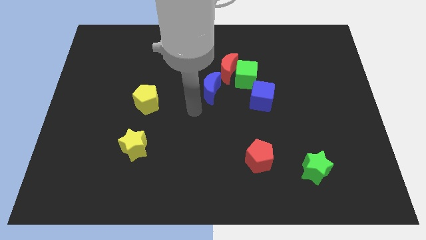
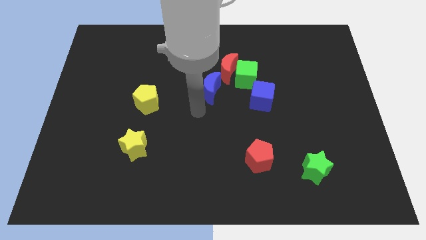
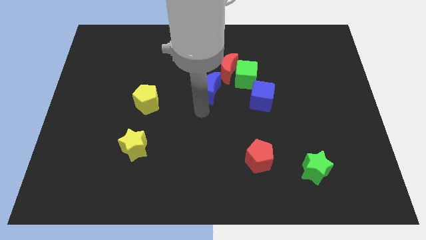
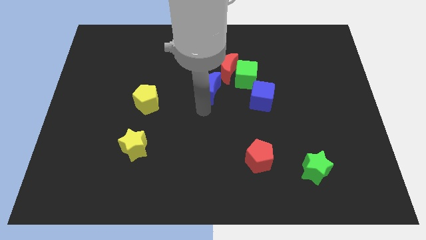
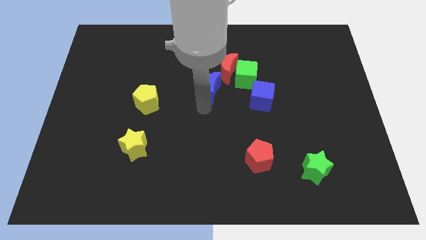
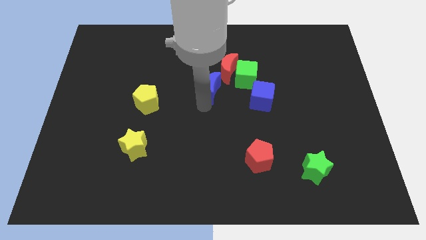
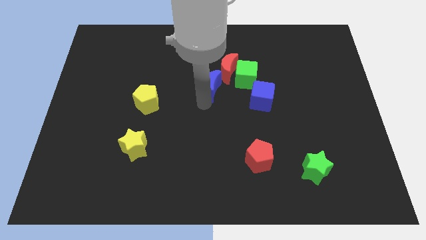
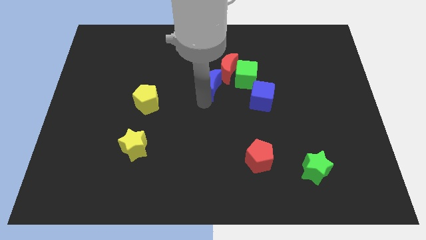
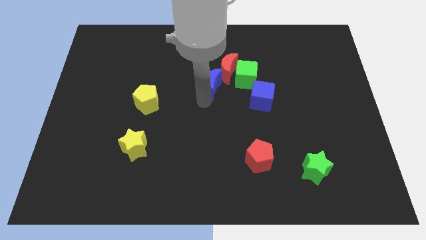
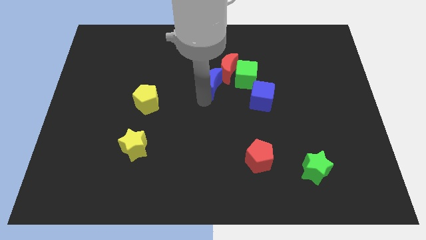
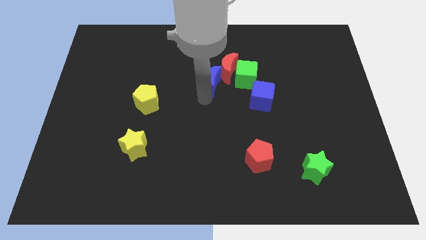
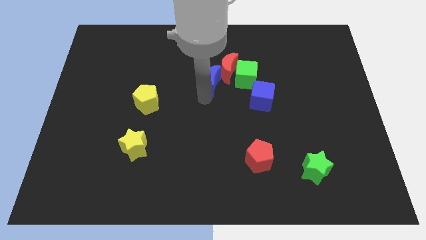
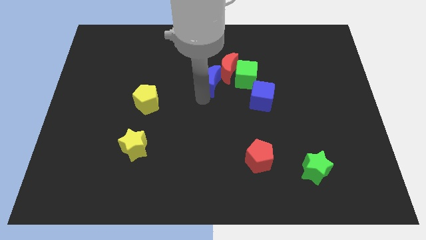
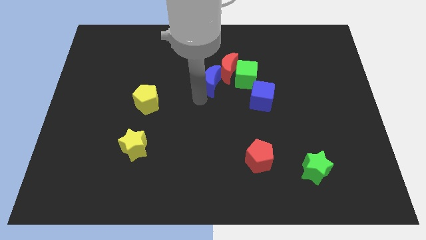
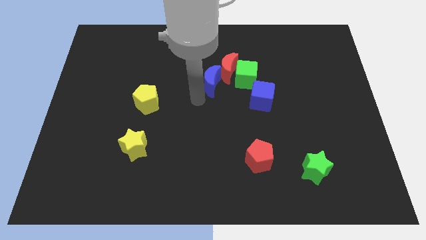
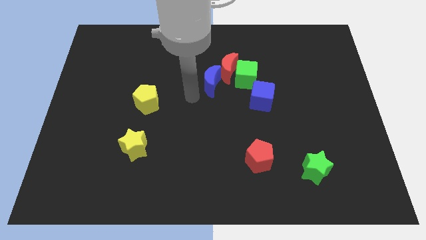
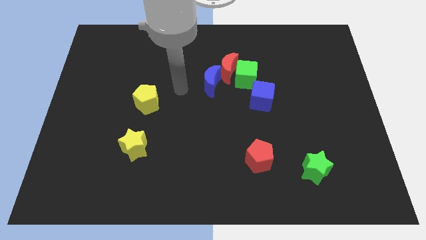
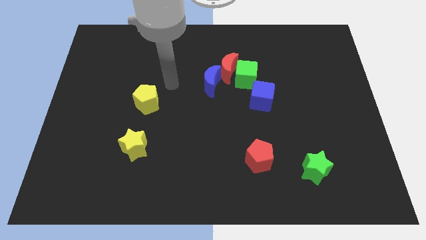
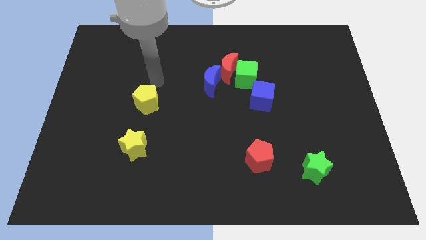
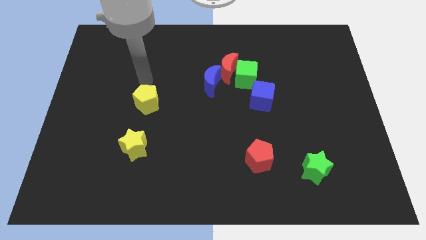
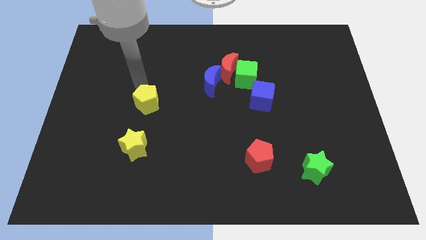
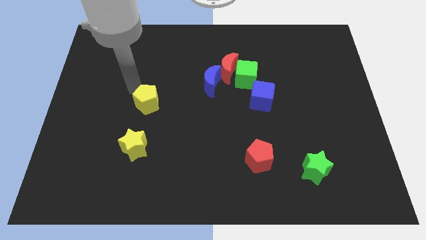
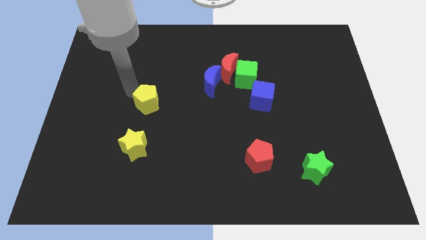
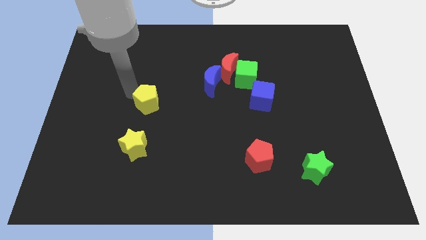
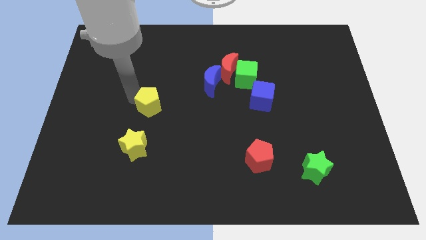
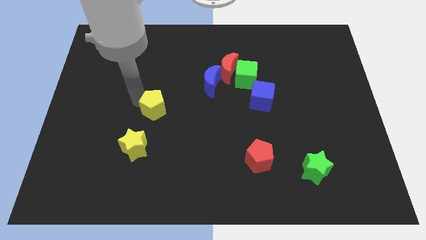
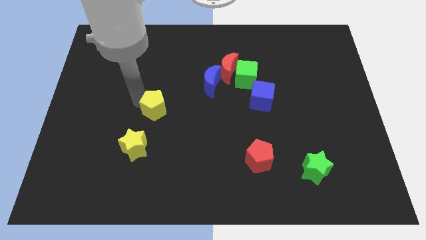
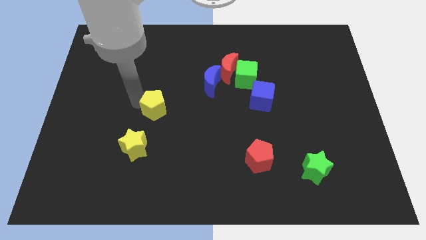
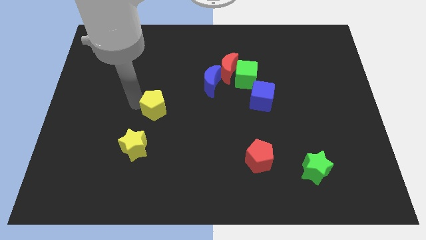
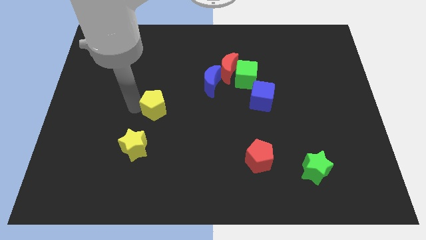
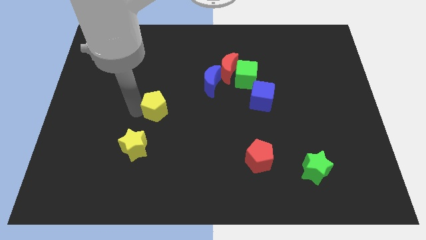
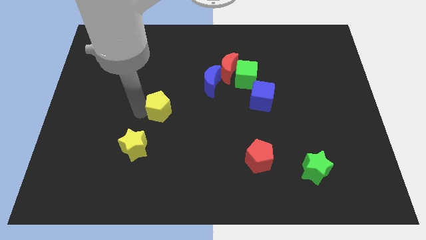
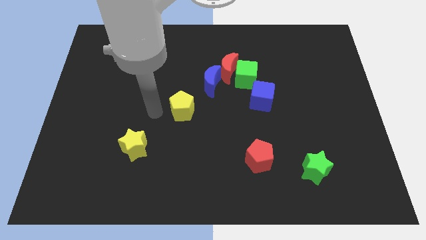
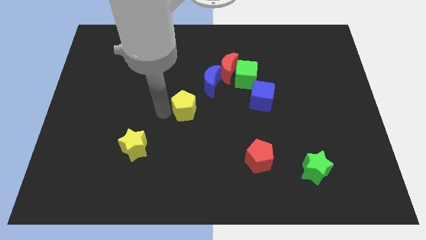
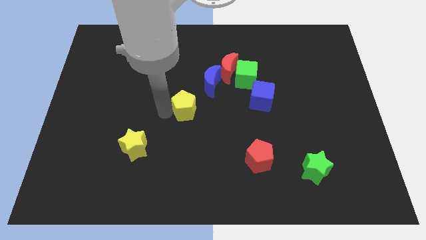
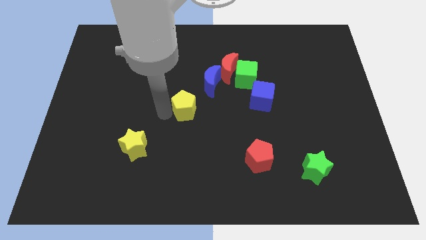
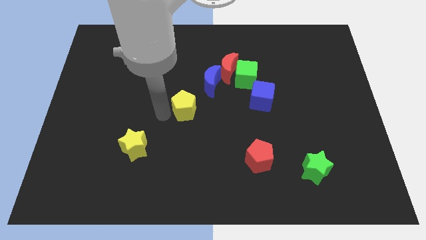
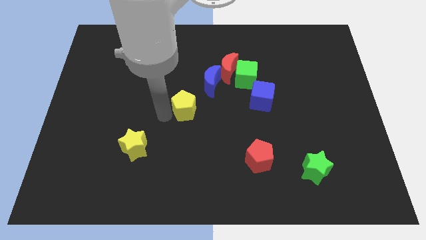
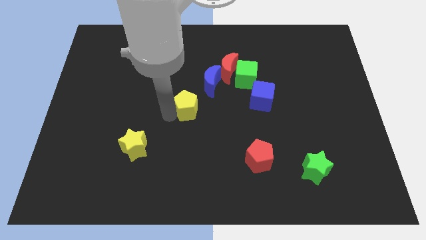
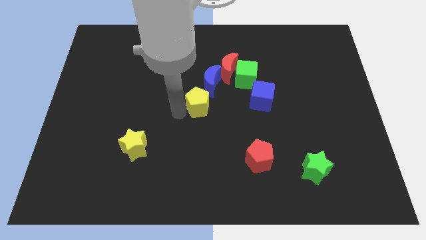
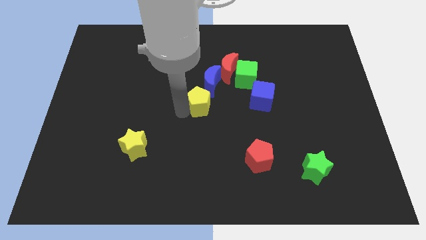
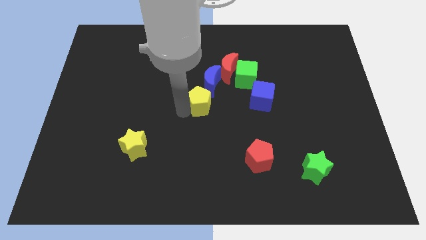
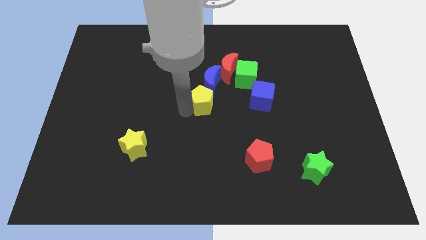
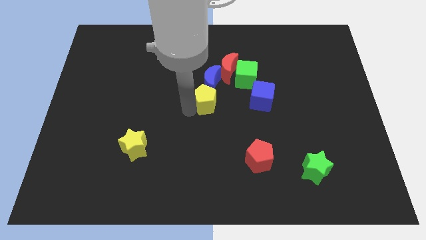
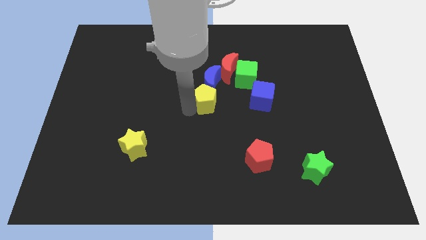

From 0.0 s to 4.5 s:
place yellow pentagon below blue moon

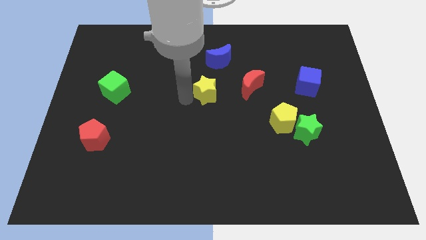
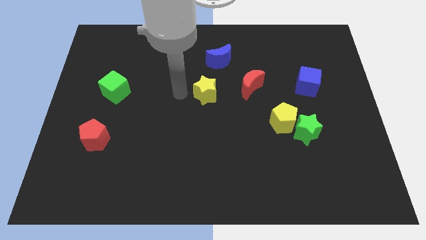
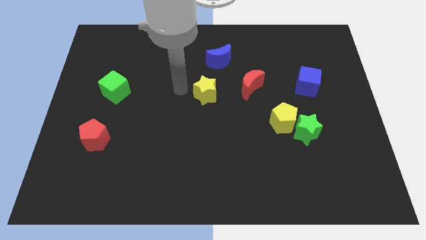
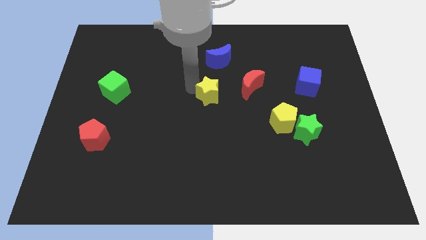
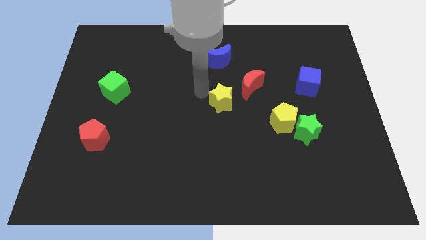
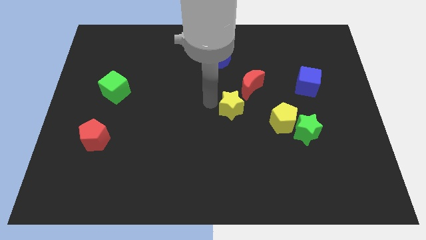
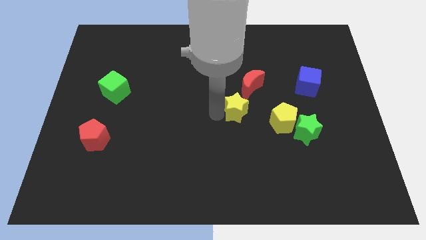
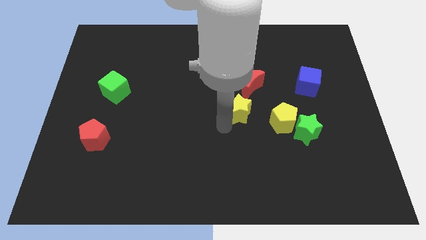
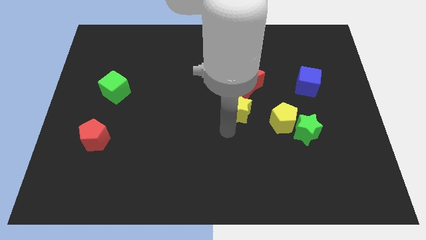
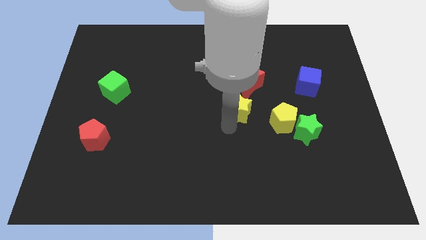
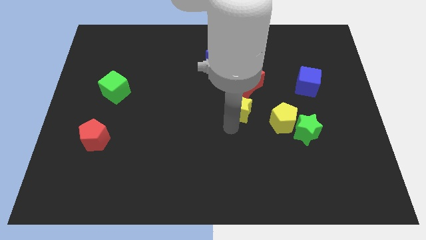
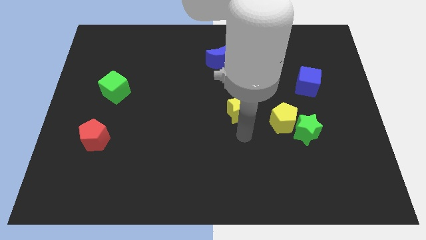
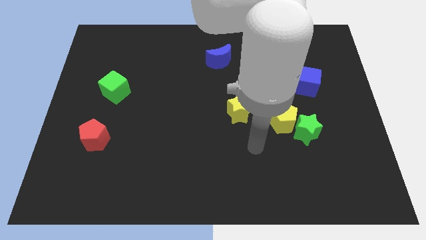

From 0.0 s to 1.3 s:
slide the yellow star towards the yellow pentagon

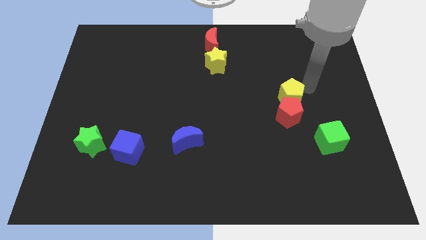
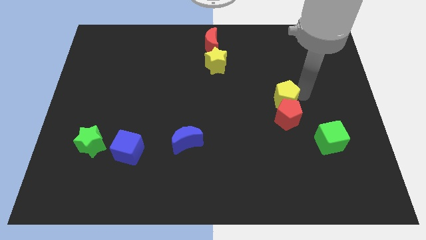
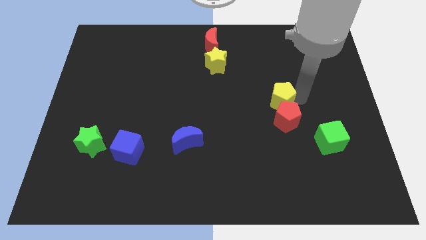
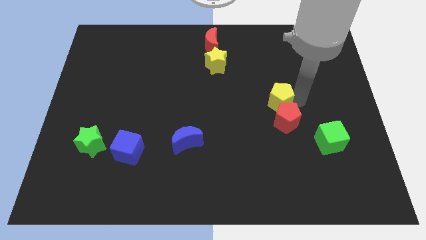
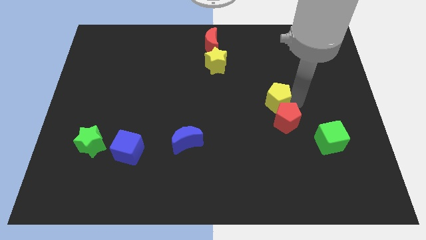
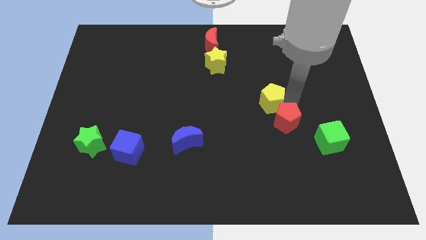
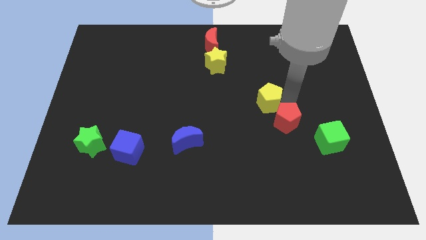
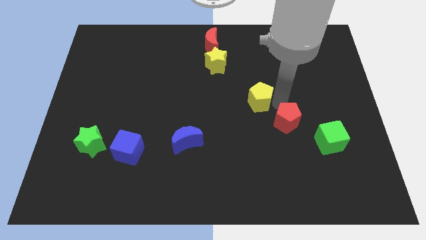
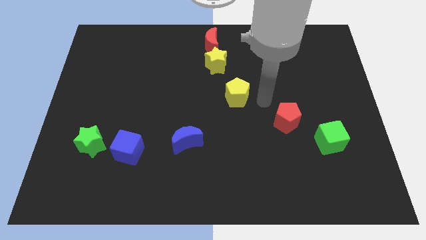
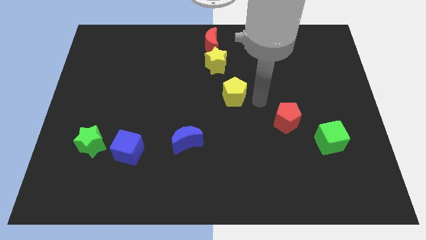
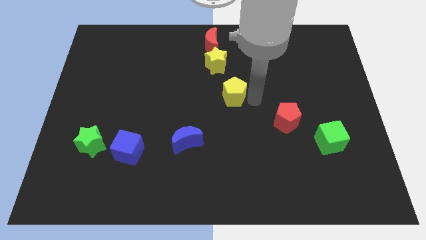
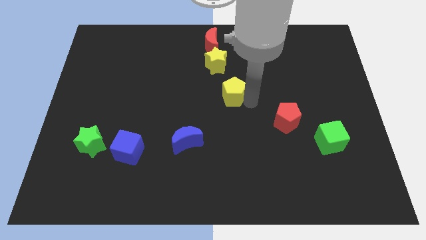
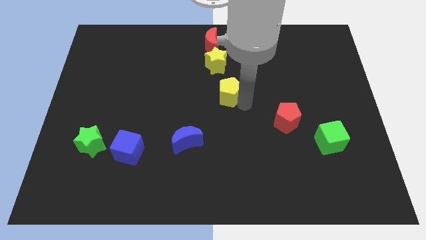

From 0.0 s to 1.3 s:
separate the yellow pentagon from the red pentagon

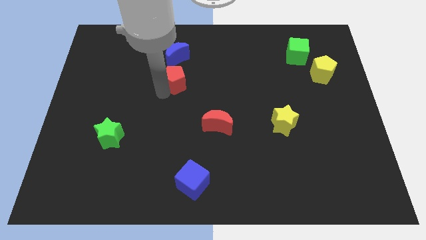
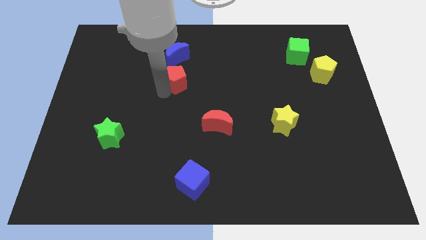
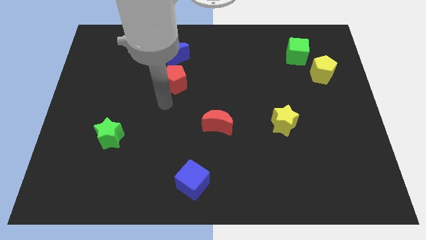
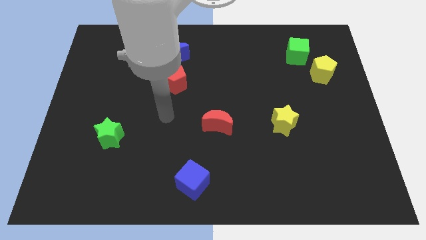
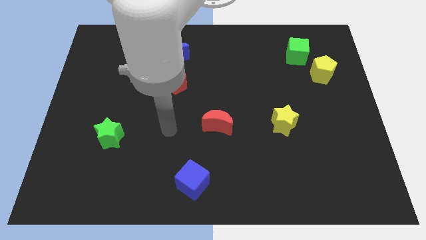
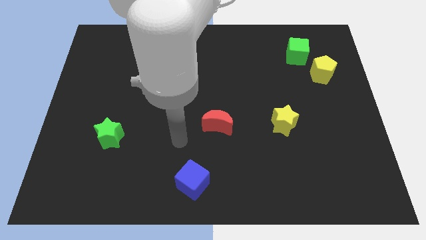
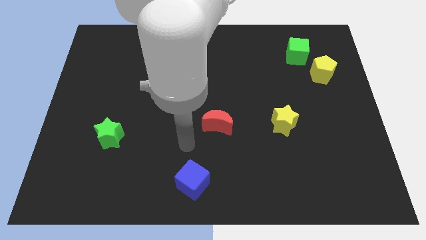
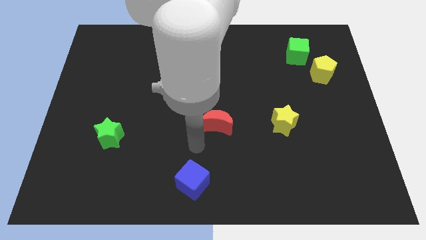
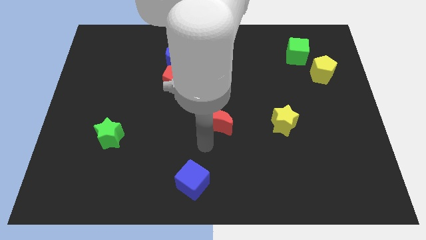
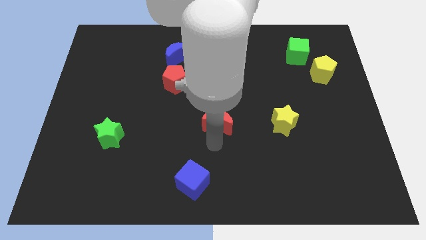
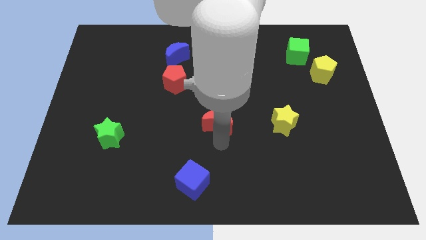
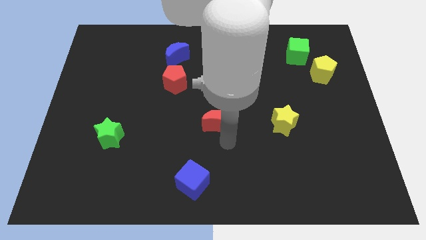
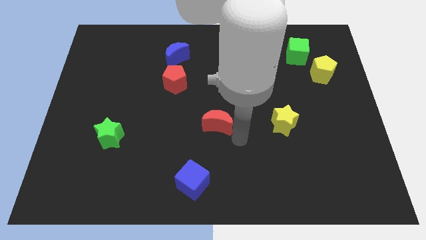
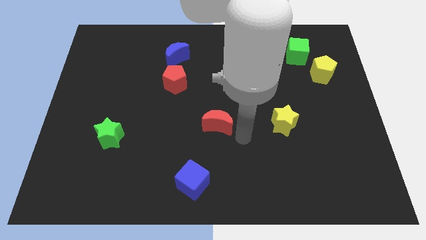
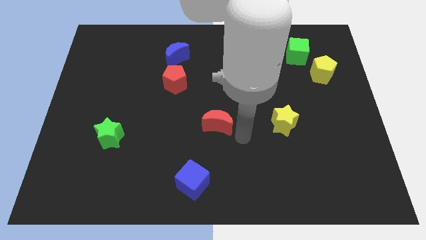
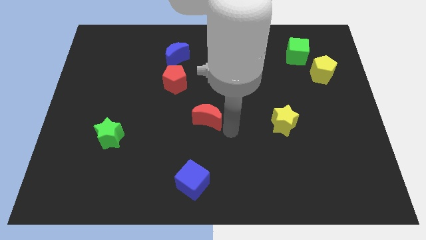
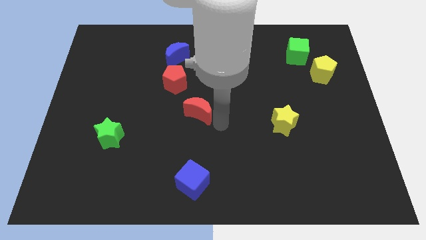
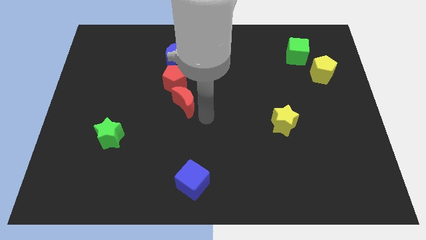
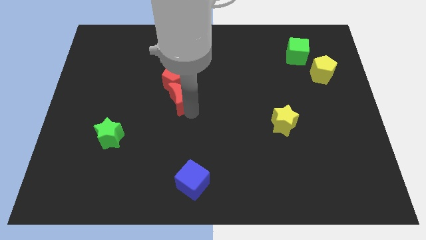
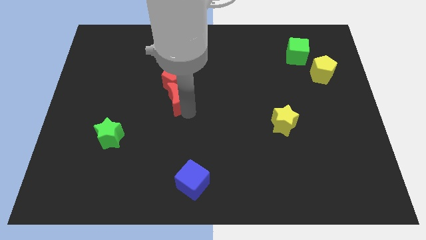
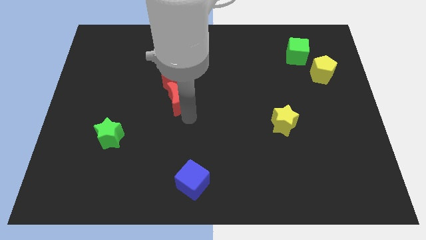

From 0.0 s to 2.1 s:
move red moon close to the red pentagon
